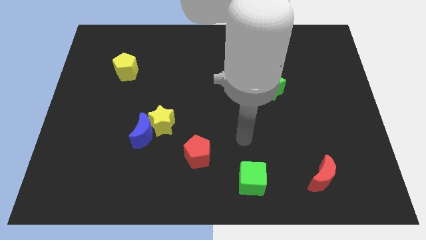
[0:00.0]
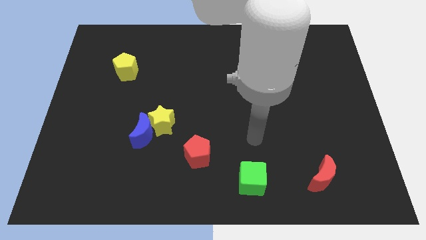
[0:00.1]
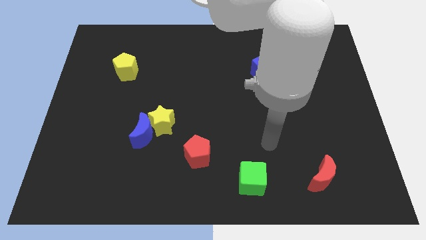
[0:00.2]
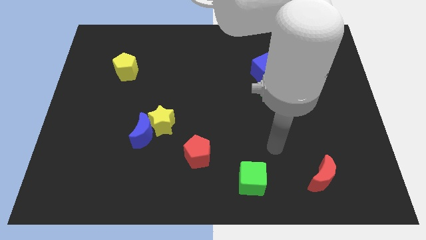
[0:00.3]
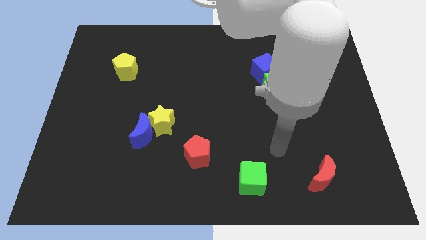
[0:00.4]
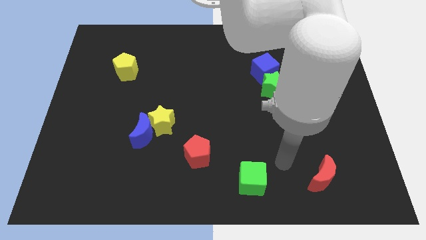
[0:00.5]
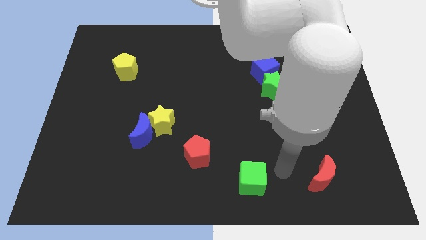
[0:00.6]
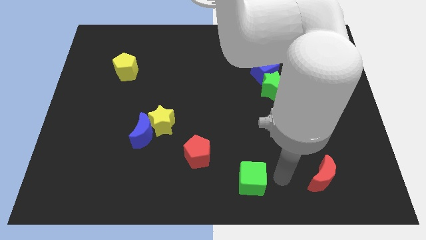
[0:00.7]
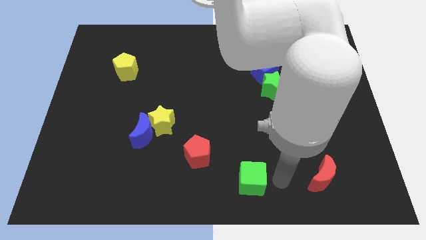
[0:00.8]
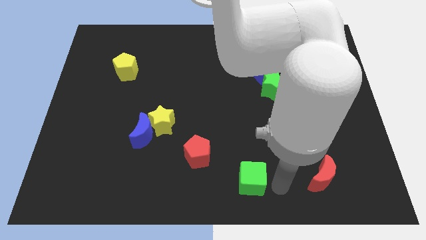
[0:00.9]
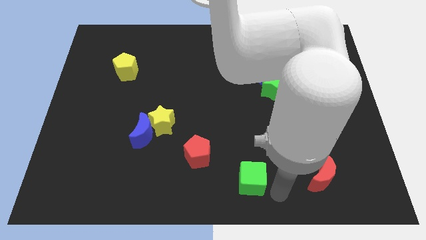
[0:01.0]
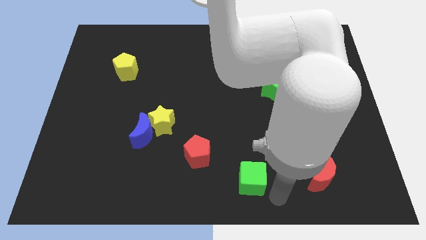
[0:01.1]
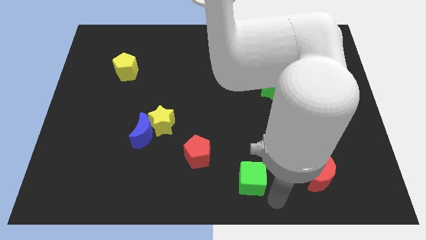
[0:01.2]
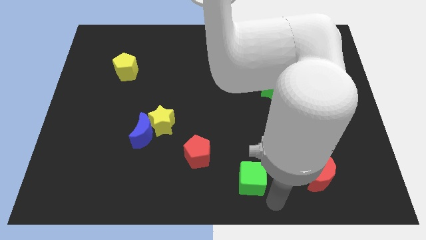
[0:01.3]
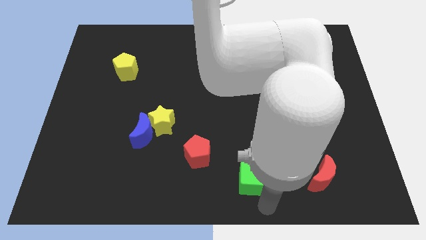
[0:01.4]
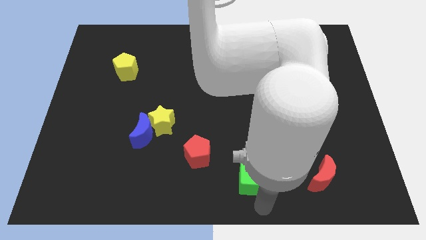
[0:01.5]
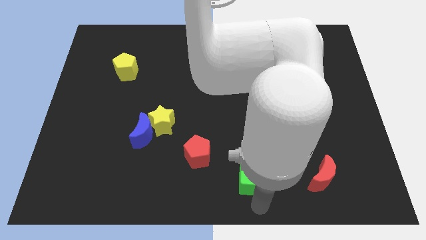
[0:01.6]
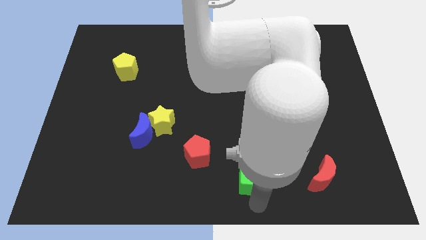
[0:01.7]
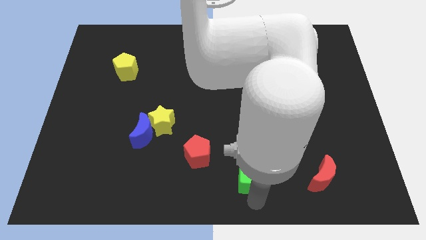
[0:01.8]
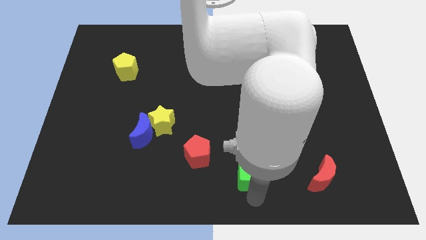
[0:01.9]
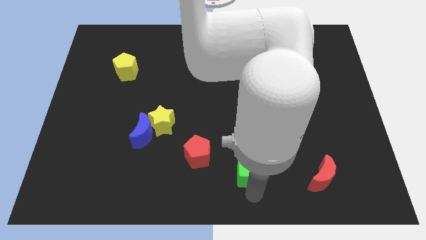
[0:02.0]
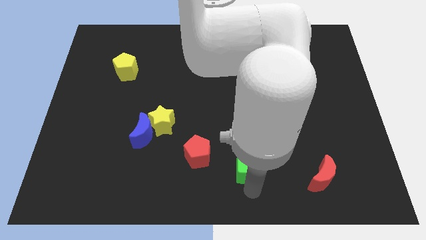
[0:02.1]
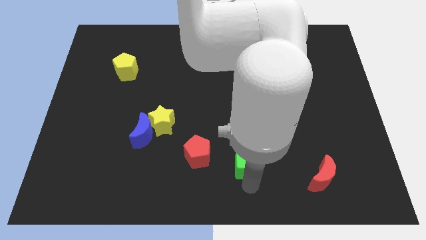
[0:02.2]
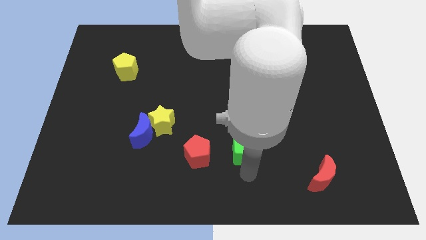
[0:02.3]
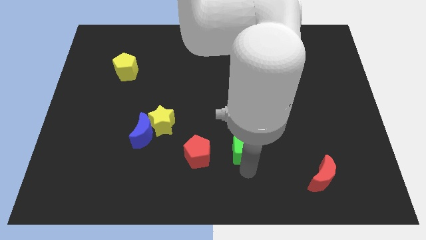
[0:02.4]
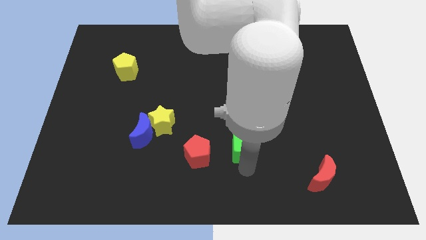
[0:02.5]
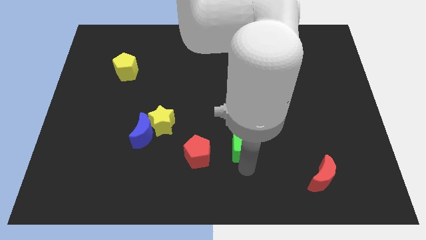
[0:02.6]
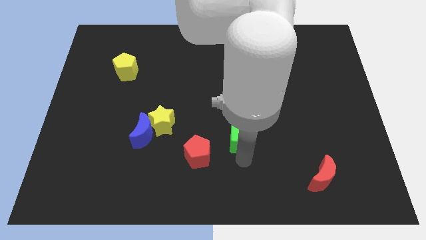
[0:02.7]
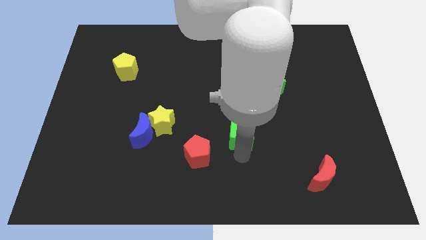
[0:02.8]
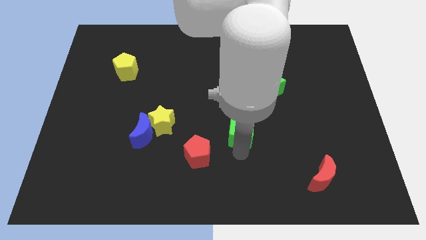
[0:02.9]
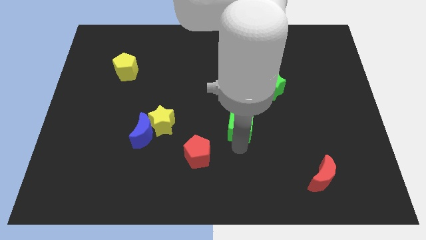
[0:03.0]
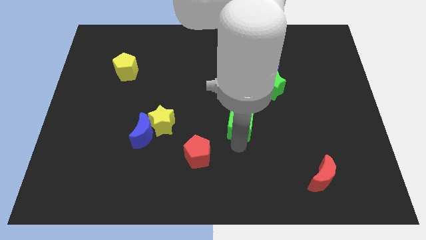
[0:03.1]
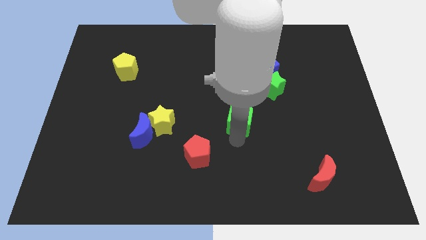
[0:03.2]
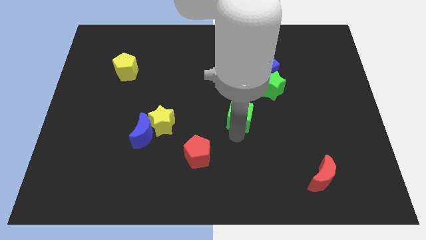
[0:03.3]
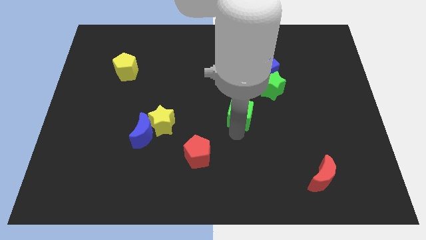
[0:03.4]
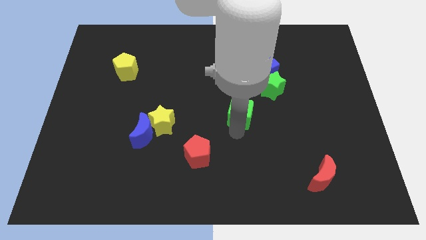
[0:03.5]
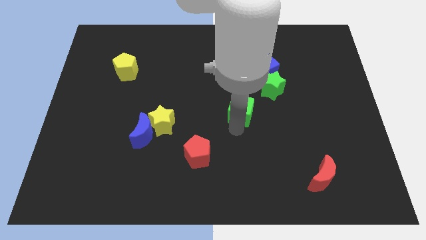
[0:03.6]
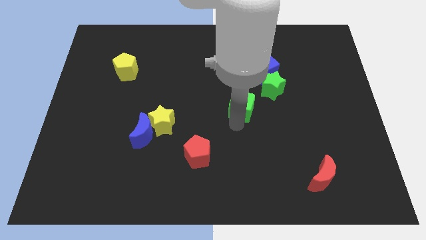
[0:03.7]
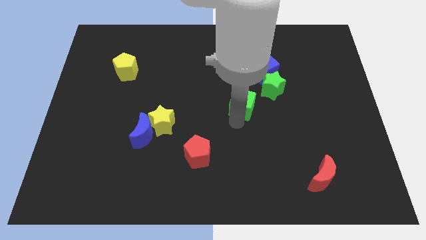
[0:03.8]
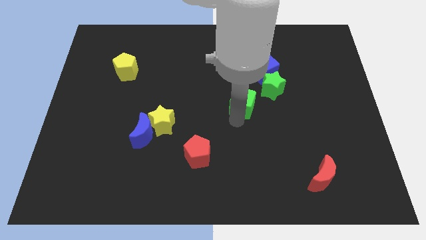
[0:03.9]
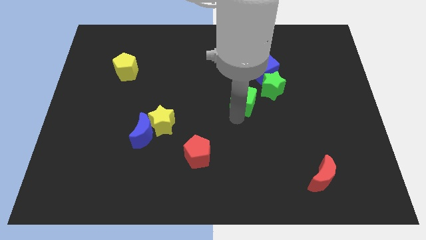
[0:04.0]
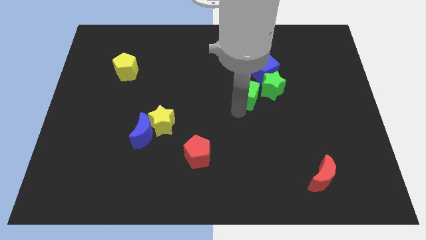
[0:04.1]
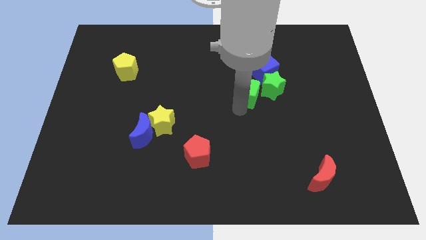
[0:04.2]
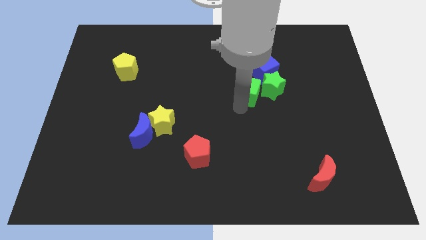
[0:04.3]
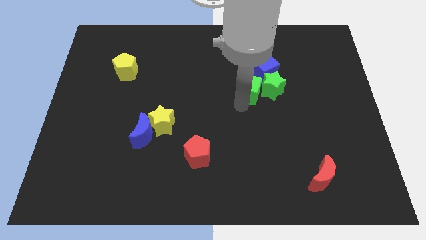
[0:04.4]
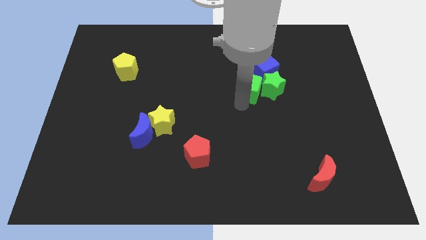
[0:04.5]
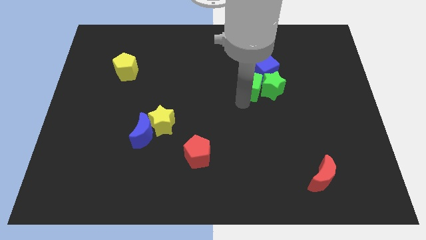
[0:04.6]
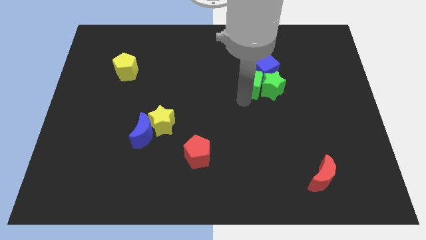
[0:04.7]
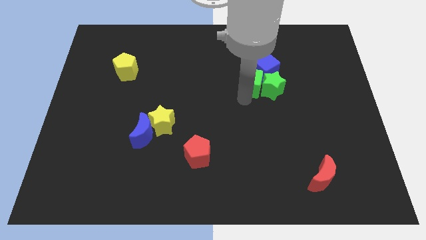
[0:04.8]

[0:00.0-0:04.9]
move the green cube next to the blue cube

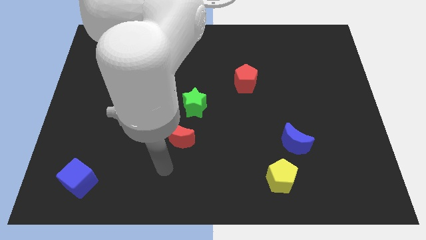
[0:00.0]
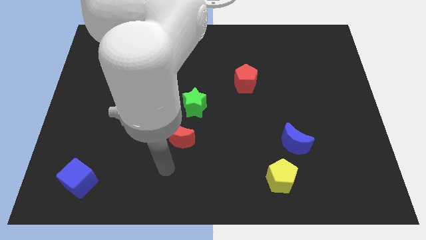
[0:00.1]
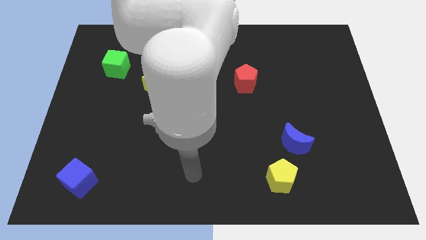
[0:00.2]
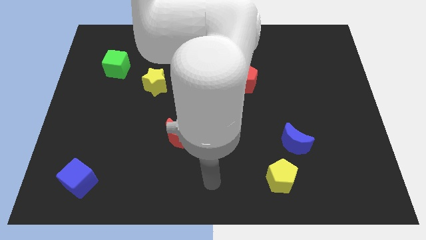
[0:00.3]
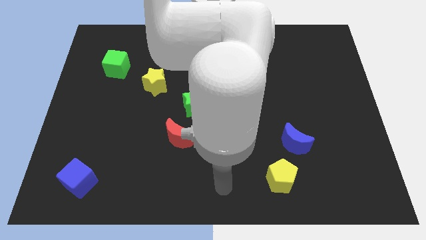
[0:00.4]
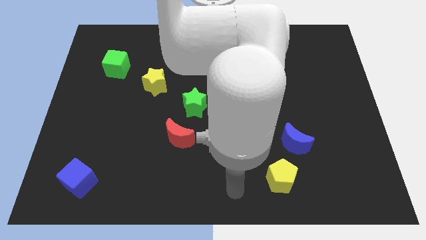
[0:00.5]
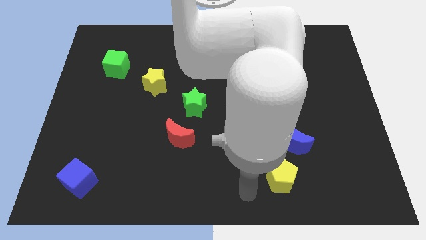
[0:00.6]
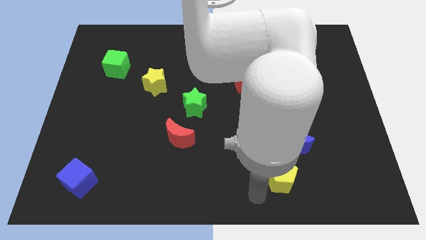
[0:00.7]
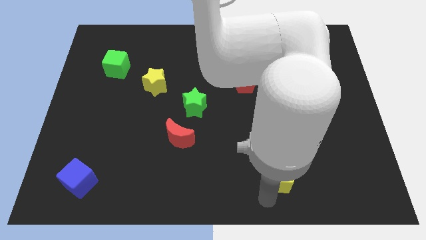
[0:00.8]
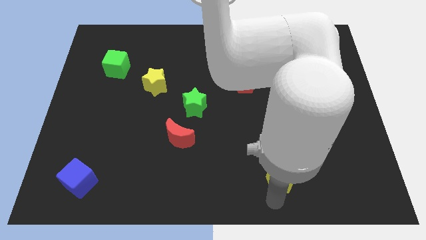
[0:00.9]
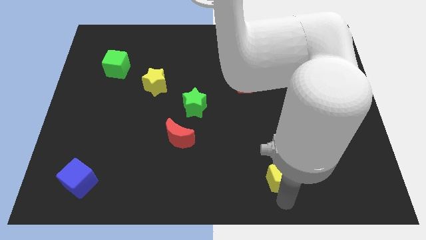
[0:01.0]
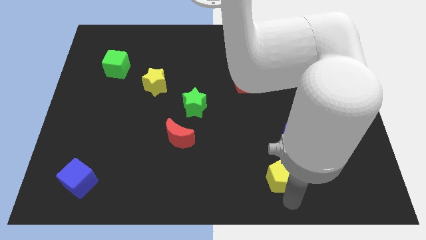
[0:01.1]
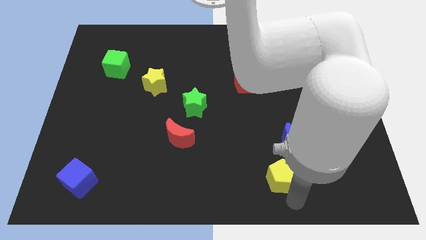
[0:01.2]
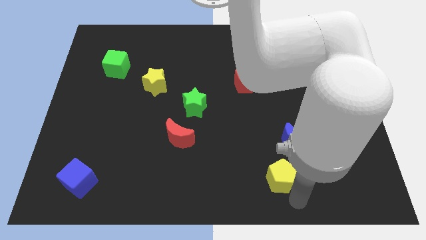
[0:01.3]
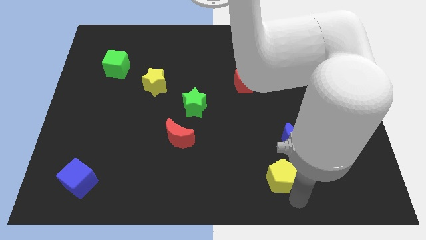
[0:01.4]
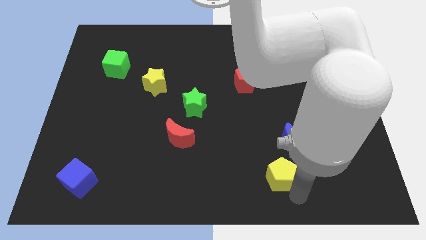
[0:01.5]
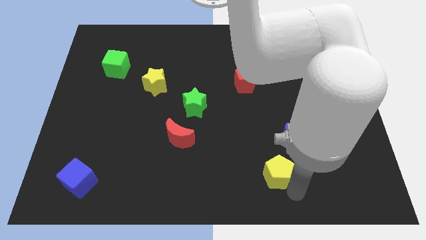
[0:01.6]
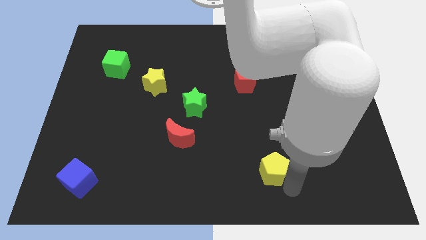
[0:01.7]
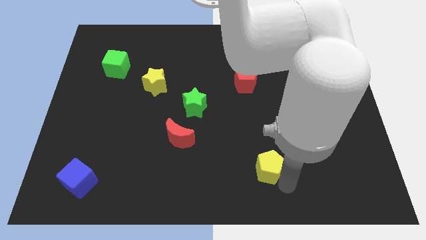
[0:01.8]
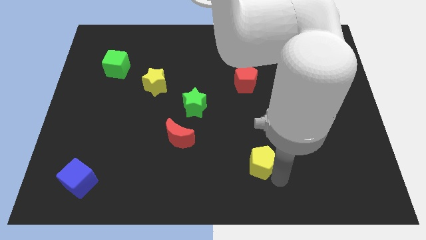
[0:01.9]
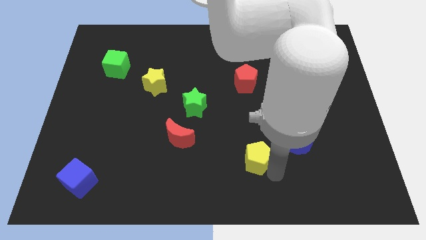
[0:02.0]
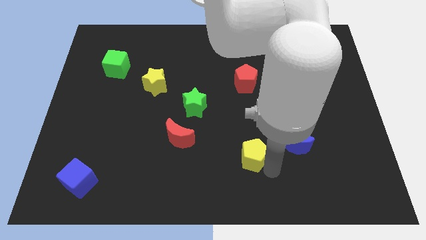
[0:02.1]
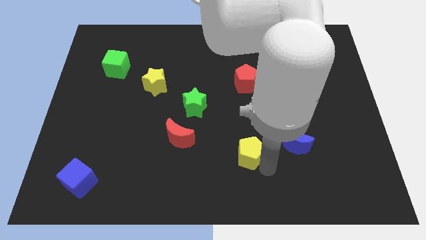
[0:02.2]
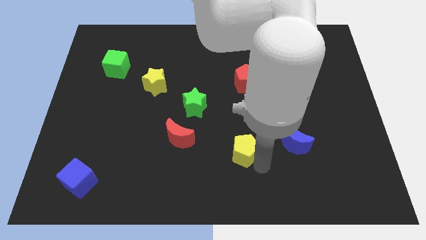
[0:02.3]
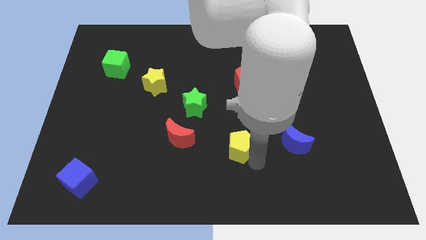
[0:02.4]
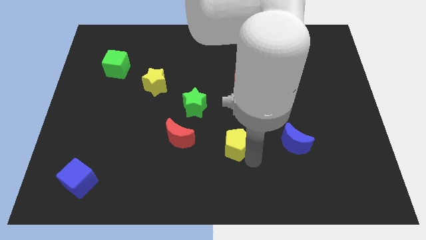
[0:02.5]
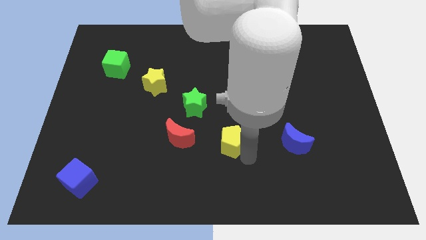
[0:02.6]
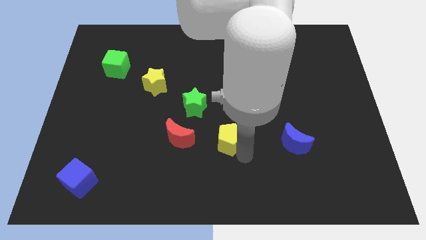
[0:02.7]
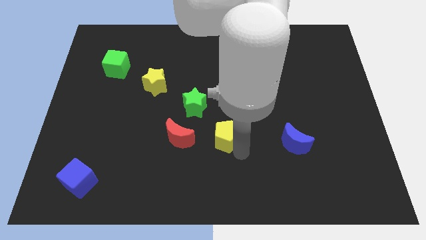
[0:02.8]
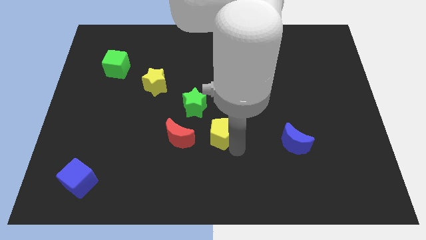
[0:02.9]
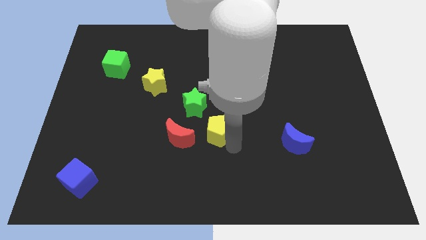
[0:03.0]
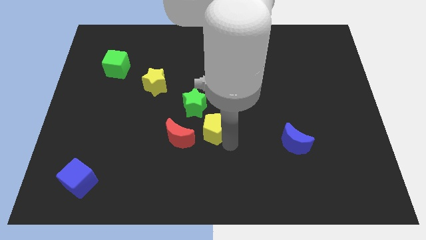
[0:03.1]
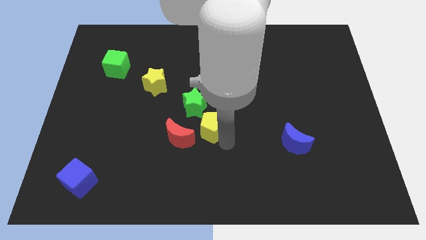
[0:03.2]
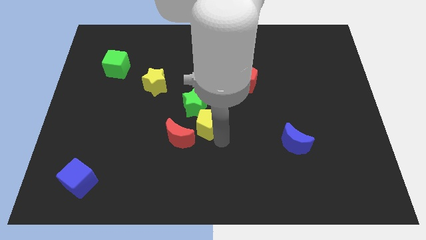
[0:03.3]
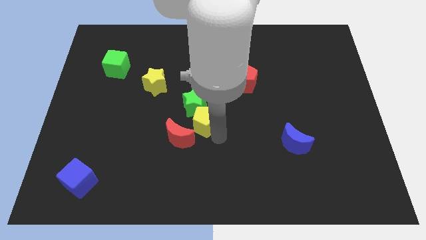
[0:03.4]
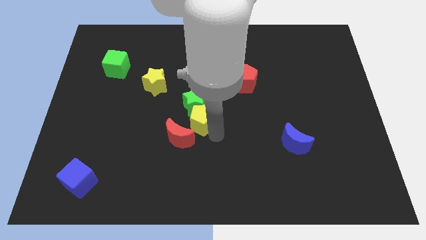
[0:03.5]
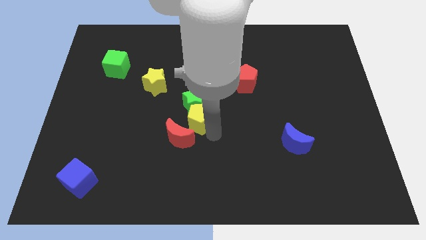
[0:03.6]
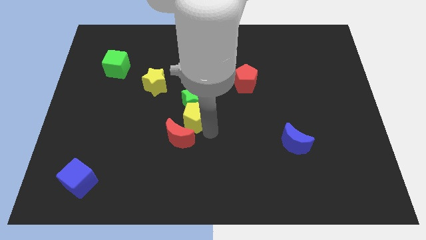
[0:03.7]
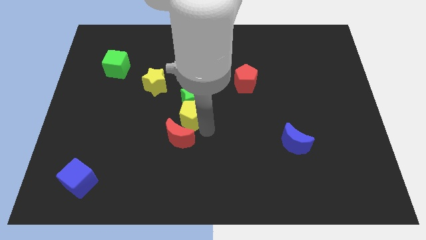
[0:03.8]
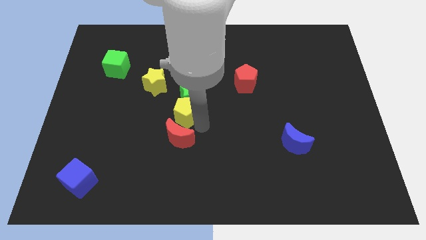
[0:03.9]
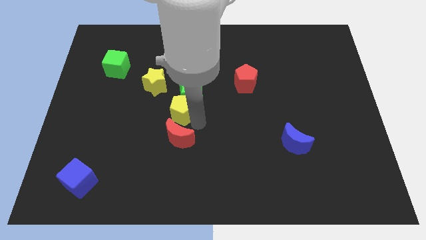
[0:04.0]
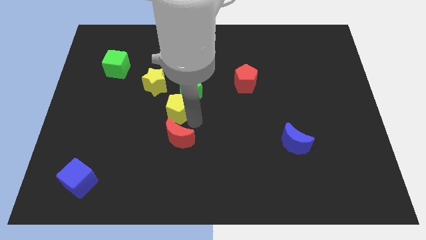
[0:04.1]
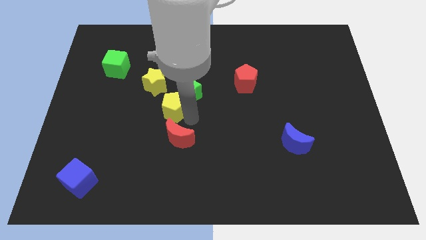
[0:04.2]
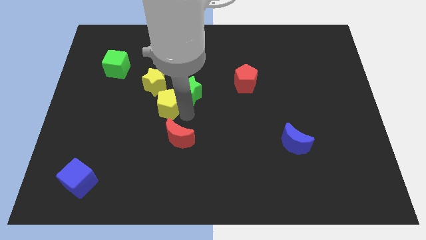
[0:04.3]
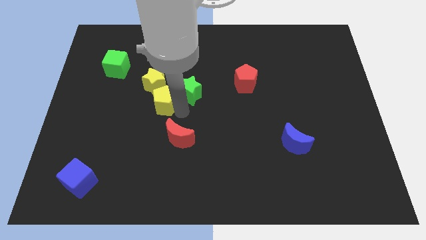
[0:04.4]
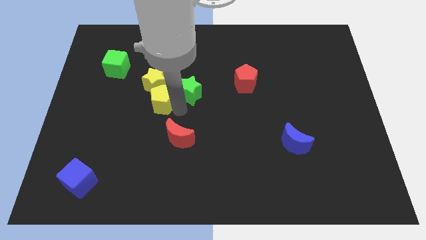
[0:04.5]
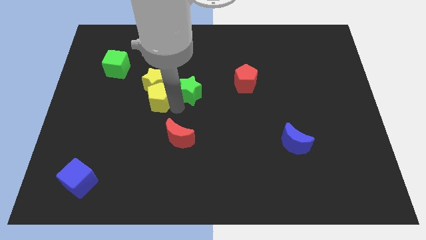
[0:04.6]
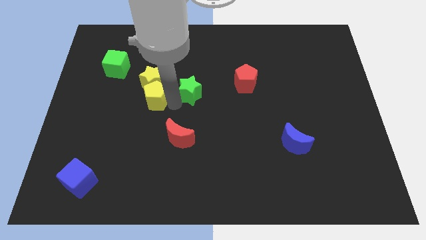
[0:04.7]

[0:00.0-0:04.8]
move the yellow pentagon to the yellow star
